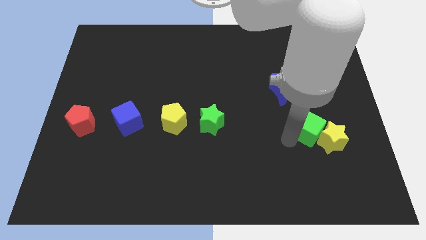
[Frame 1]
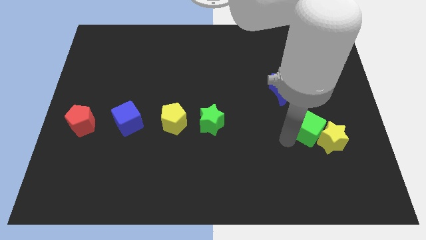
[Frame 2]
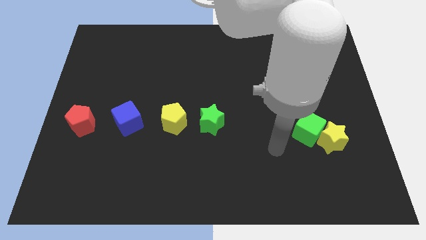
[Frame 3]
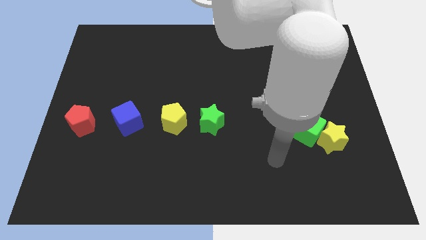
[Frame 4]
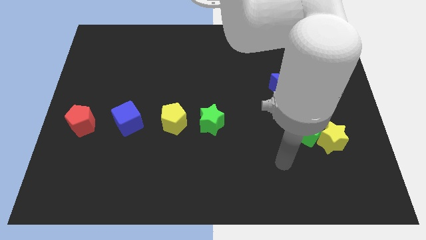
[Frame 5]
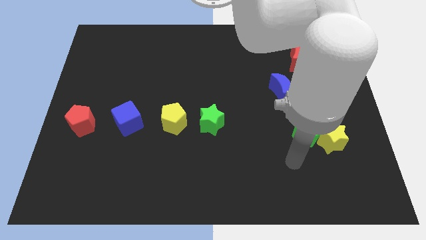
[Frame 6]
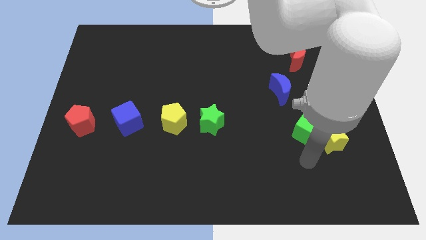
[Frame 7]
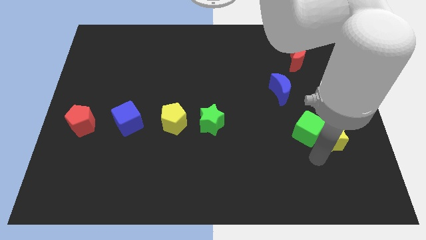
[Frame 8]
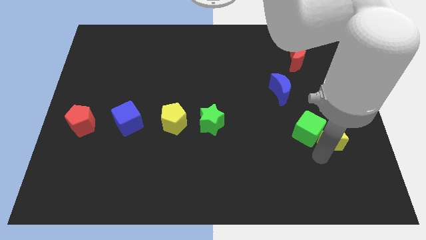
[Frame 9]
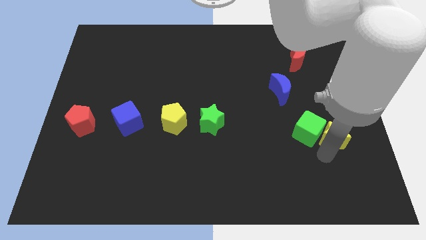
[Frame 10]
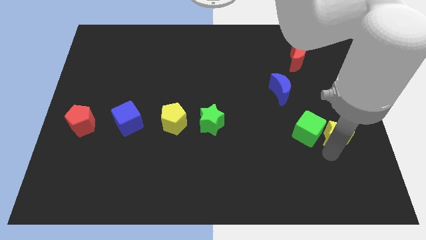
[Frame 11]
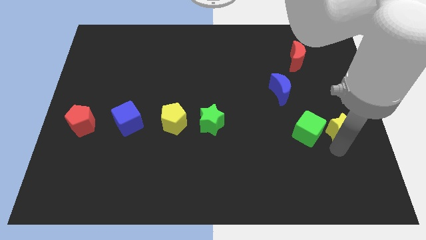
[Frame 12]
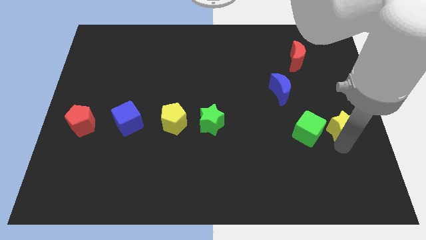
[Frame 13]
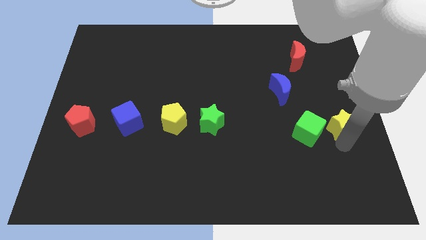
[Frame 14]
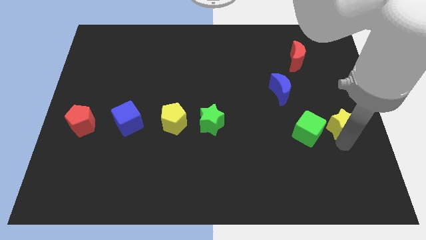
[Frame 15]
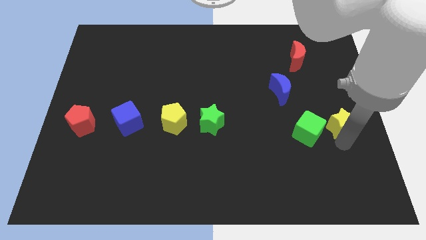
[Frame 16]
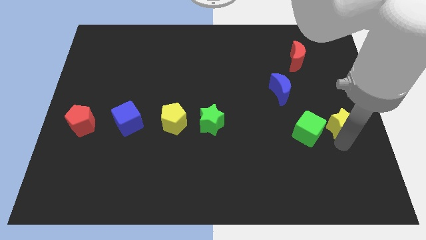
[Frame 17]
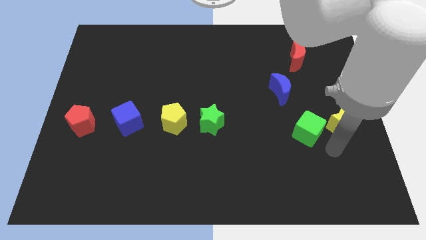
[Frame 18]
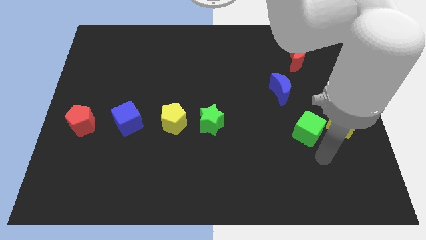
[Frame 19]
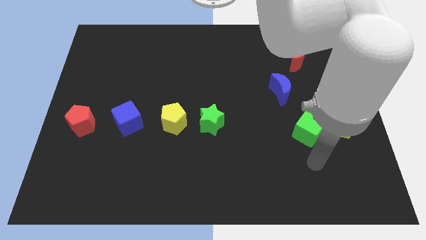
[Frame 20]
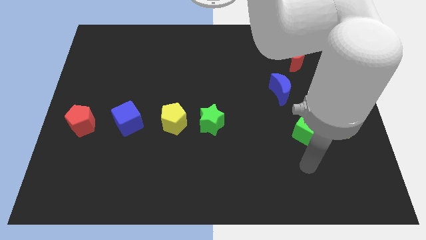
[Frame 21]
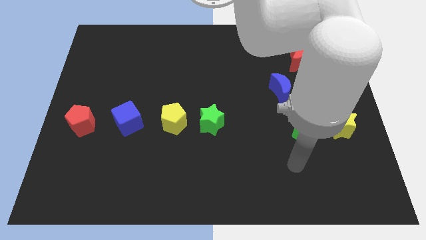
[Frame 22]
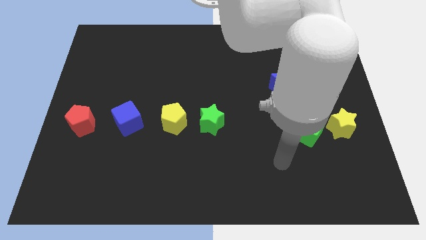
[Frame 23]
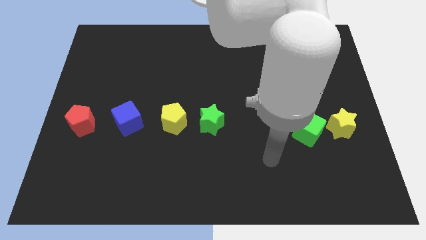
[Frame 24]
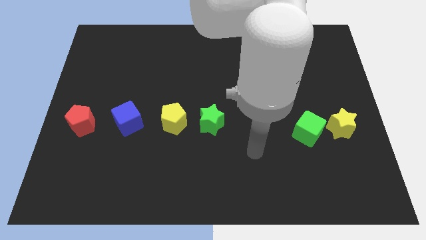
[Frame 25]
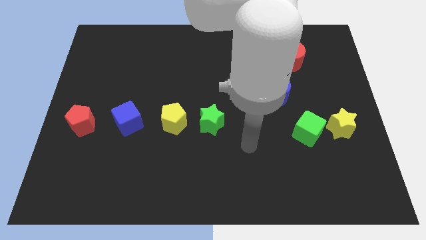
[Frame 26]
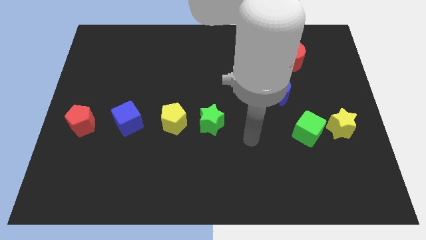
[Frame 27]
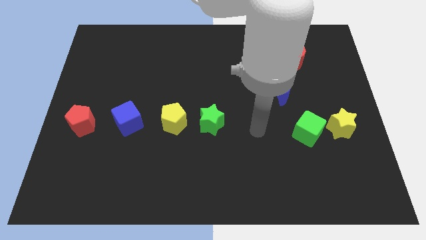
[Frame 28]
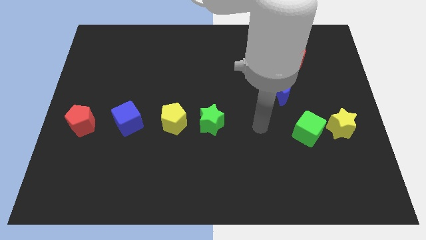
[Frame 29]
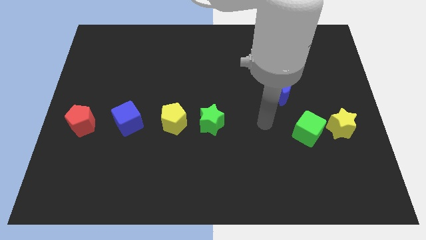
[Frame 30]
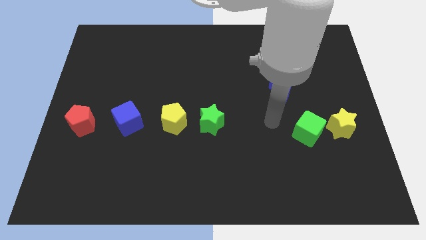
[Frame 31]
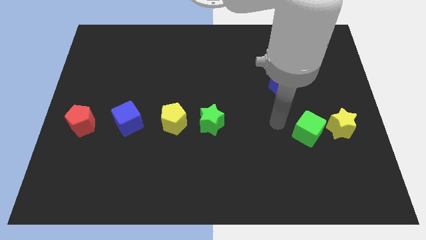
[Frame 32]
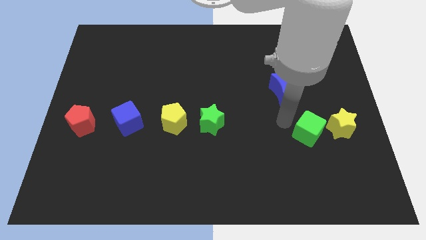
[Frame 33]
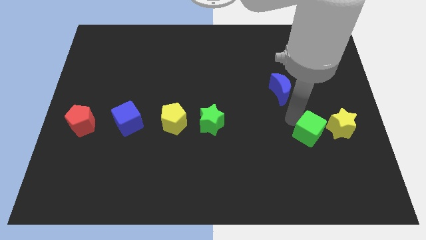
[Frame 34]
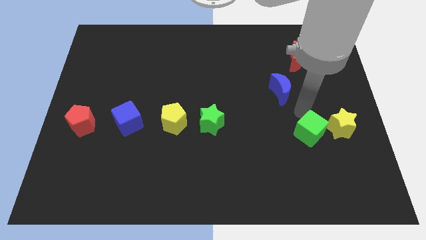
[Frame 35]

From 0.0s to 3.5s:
separate the yellow star from green cube

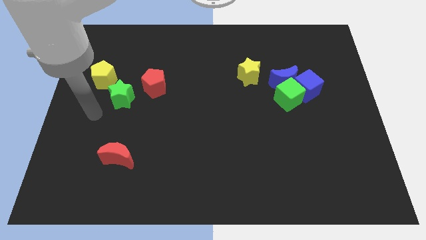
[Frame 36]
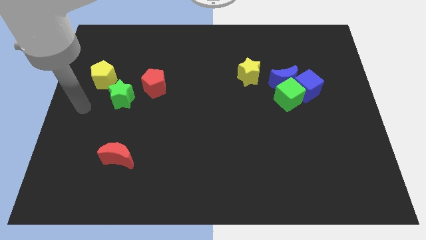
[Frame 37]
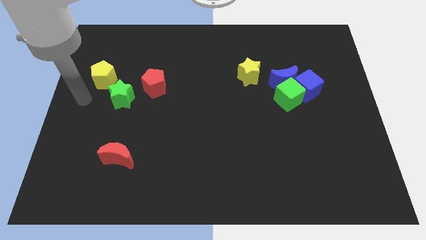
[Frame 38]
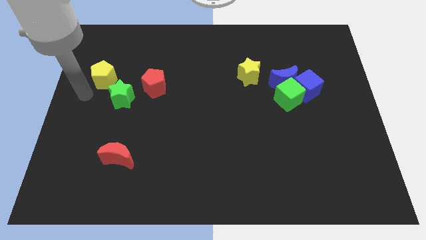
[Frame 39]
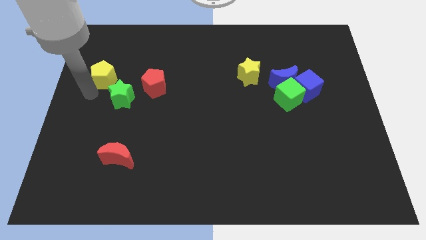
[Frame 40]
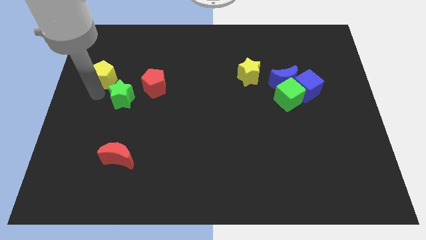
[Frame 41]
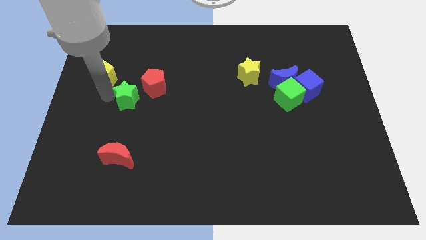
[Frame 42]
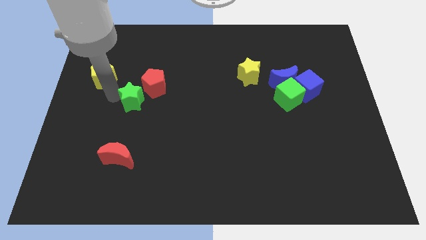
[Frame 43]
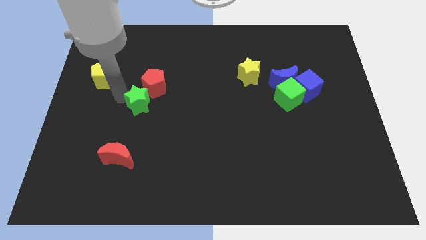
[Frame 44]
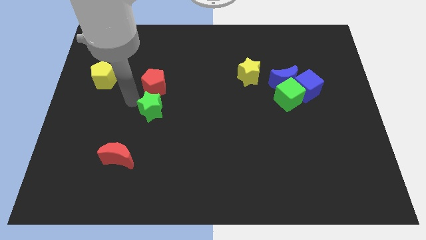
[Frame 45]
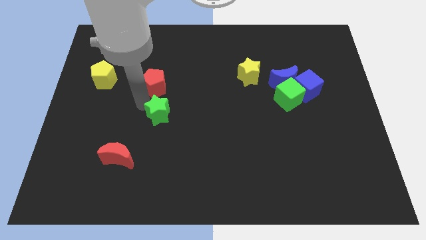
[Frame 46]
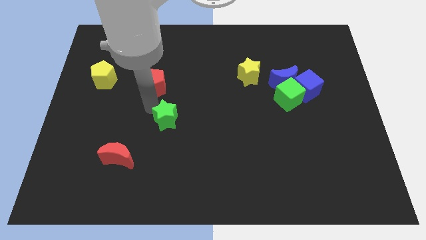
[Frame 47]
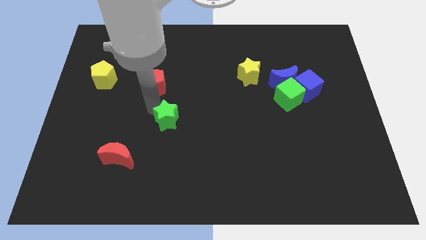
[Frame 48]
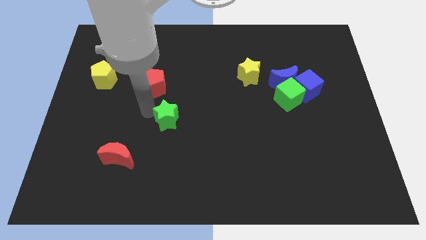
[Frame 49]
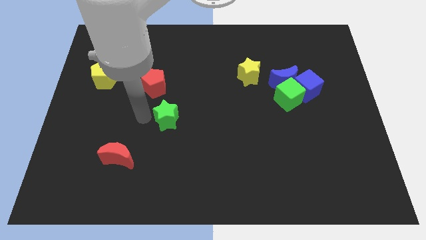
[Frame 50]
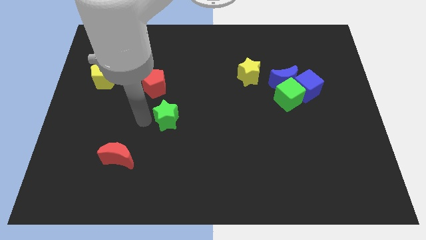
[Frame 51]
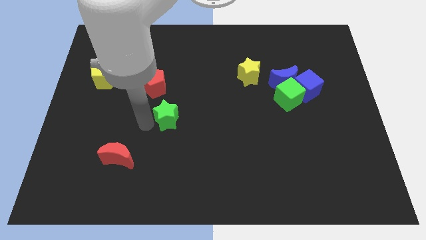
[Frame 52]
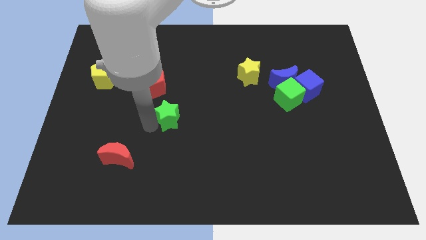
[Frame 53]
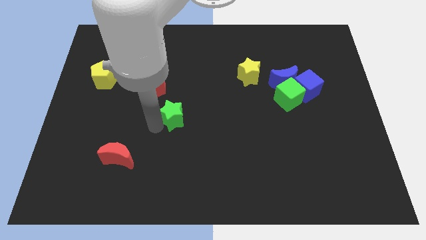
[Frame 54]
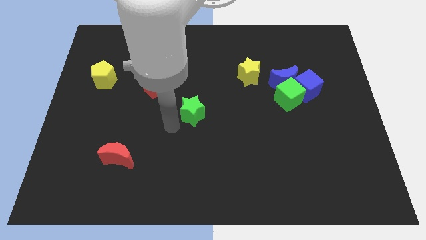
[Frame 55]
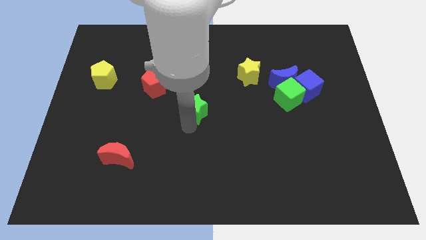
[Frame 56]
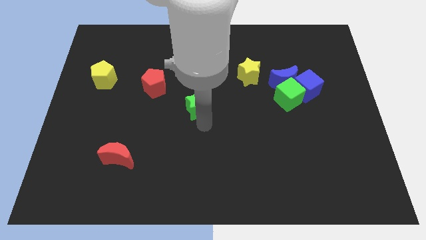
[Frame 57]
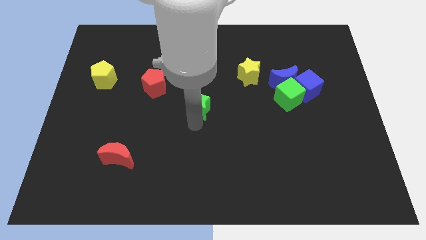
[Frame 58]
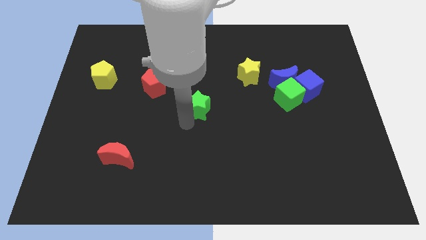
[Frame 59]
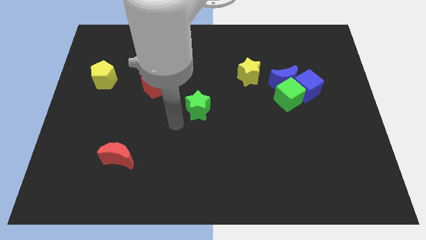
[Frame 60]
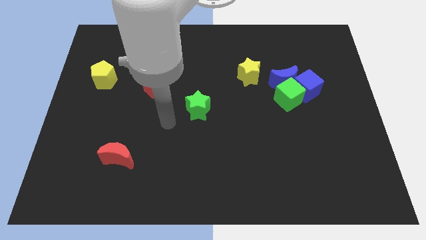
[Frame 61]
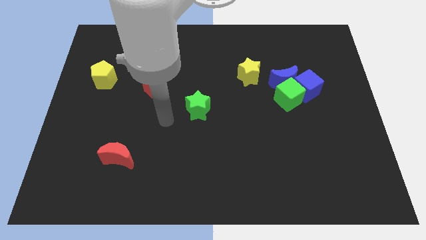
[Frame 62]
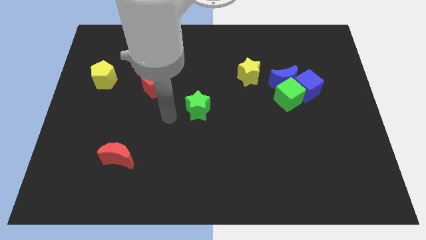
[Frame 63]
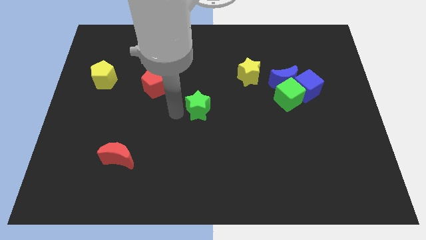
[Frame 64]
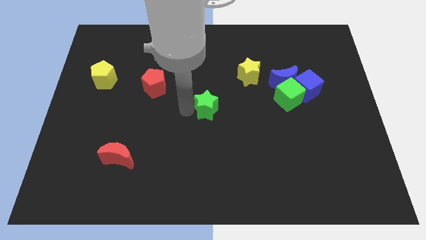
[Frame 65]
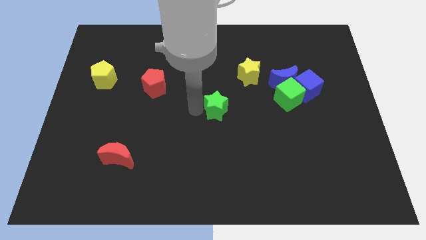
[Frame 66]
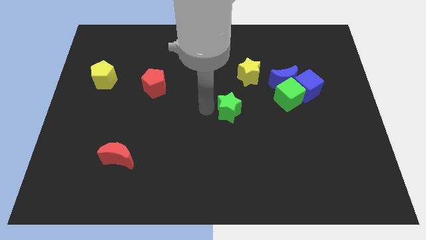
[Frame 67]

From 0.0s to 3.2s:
push green star at center

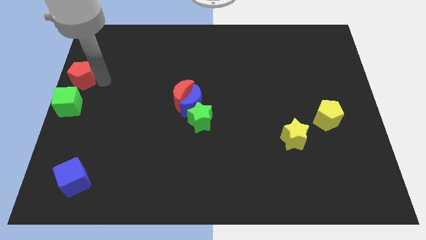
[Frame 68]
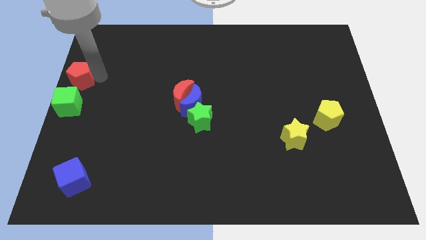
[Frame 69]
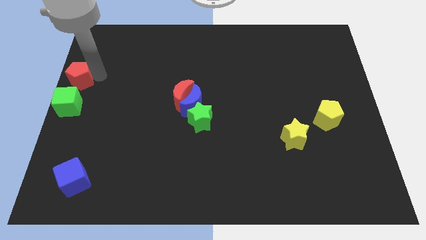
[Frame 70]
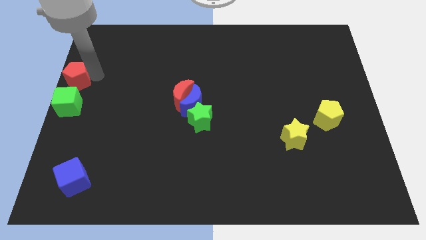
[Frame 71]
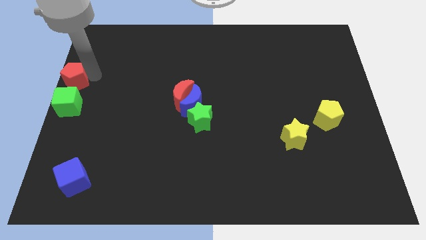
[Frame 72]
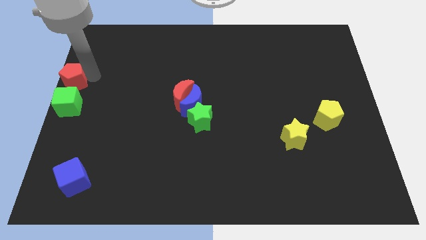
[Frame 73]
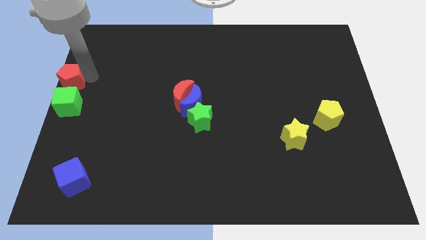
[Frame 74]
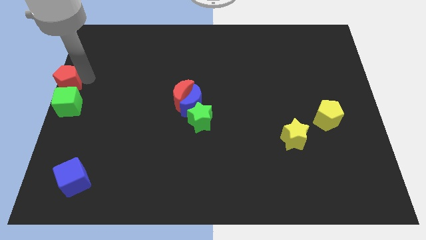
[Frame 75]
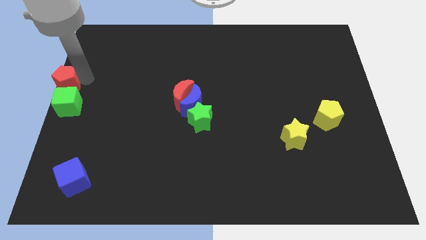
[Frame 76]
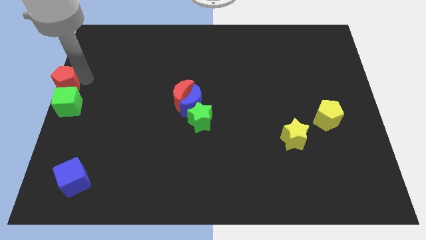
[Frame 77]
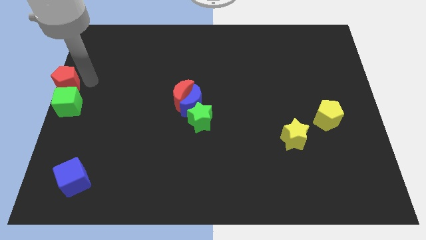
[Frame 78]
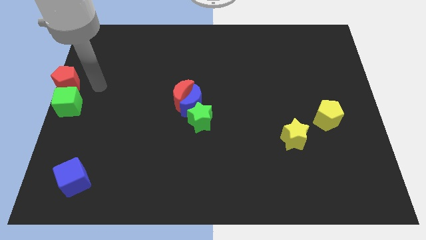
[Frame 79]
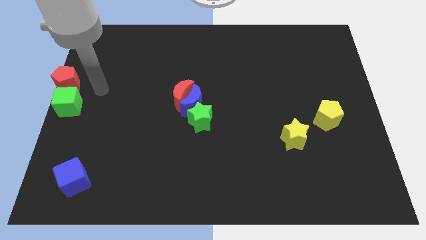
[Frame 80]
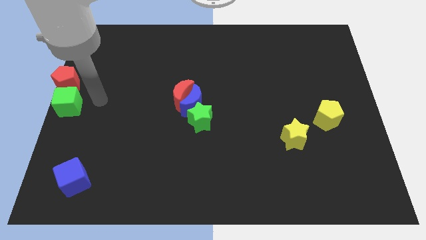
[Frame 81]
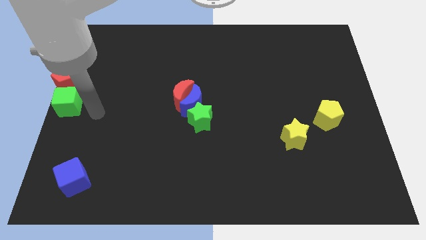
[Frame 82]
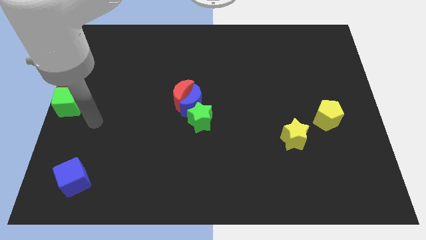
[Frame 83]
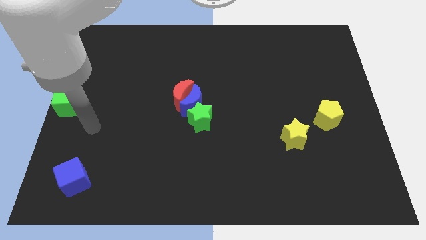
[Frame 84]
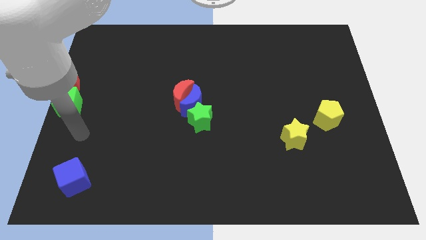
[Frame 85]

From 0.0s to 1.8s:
push red pentagon close to green cube

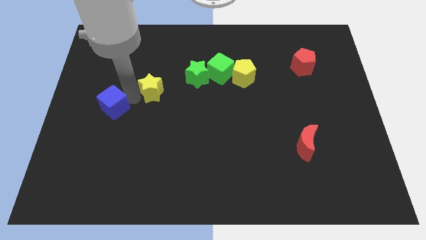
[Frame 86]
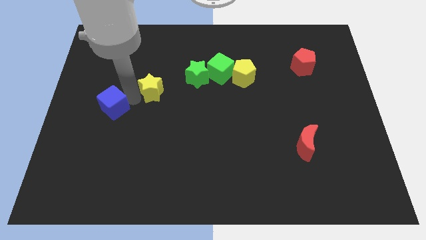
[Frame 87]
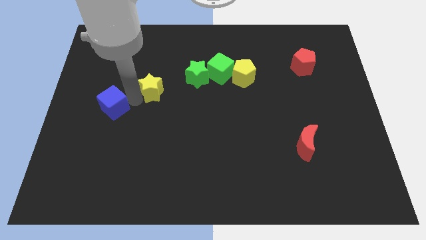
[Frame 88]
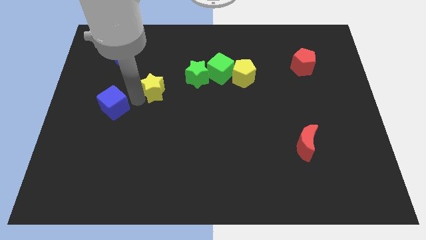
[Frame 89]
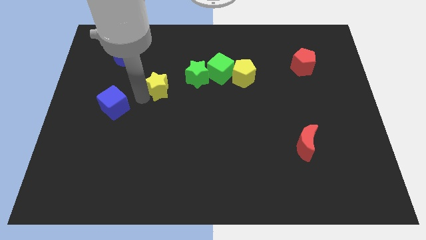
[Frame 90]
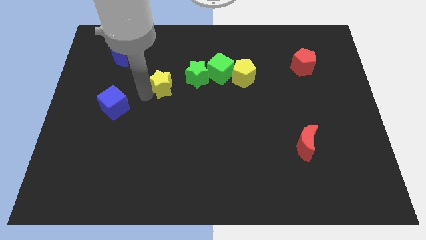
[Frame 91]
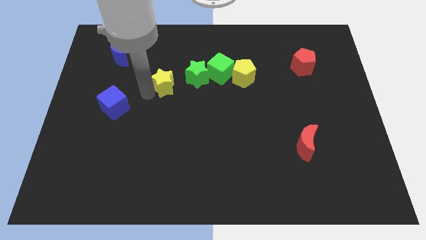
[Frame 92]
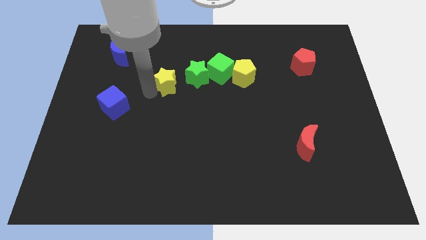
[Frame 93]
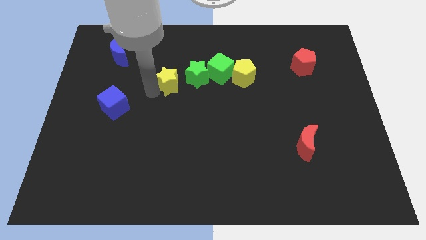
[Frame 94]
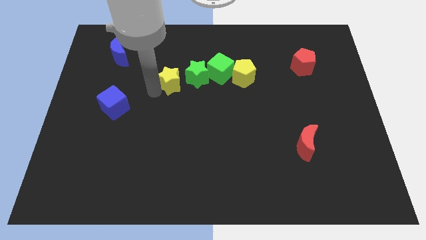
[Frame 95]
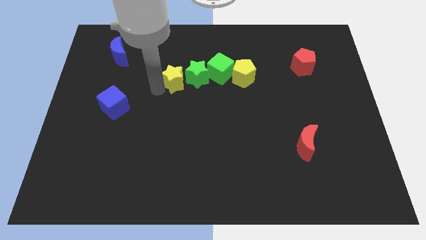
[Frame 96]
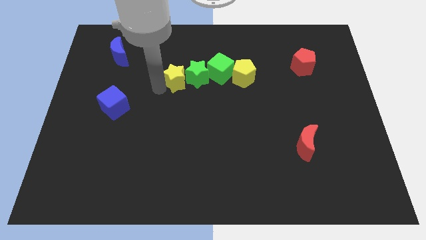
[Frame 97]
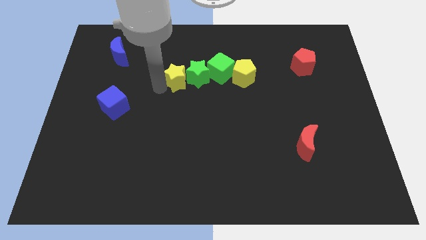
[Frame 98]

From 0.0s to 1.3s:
push the yellow star to the left side of the green star
